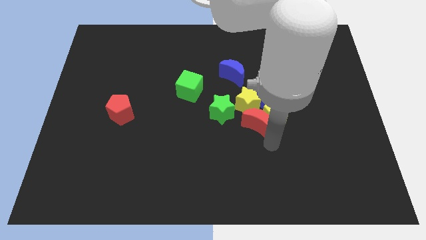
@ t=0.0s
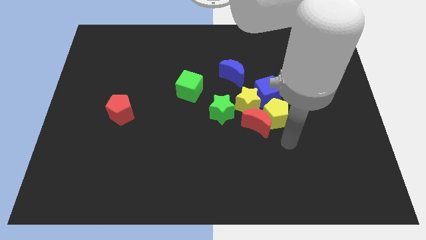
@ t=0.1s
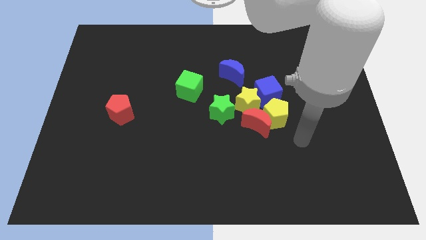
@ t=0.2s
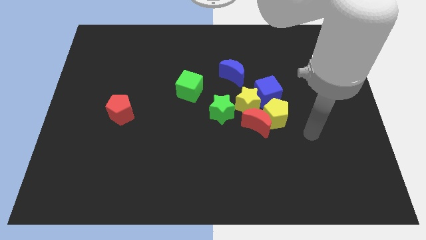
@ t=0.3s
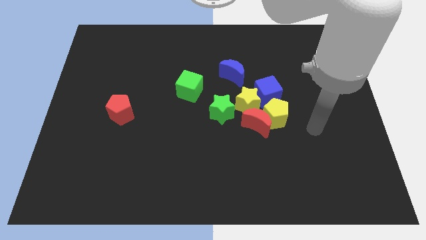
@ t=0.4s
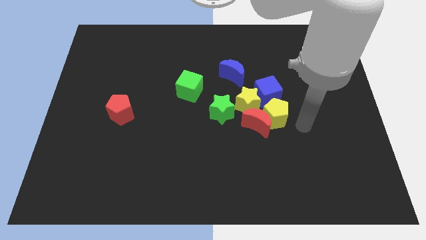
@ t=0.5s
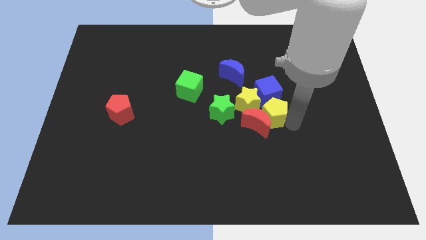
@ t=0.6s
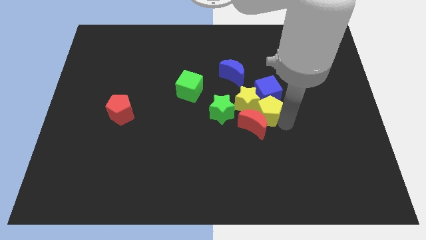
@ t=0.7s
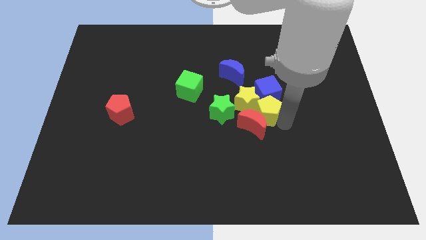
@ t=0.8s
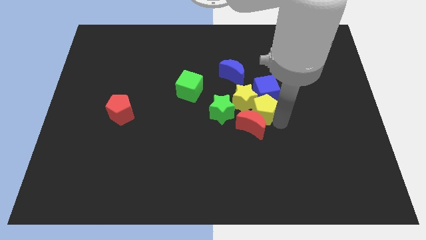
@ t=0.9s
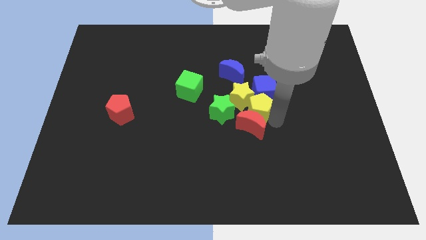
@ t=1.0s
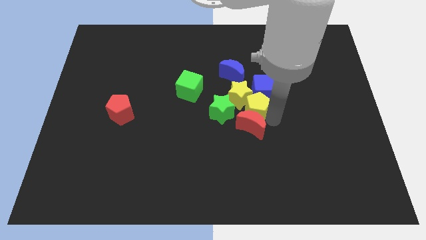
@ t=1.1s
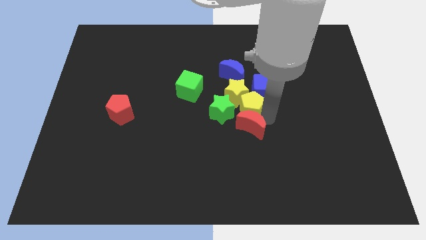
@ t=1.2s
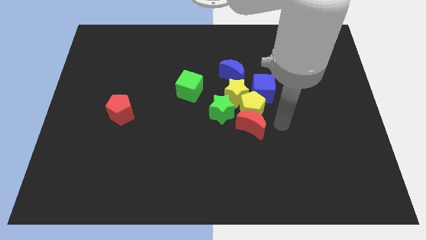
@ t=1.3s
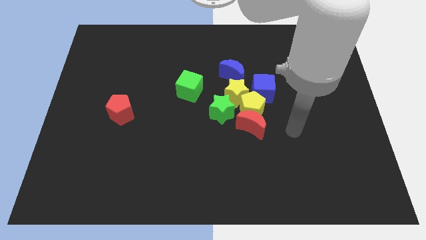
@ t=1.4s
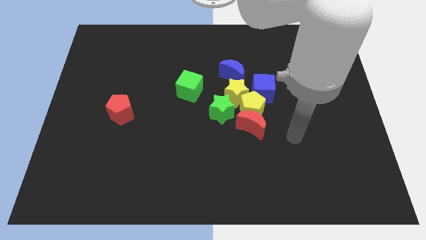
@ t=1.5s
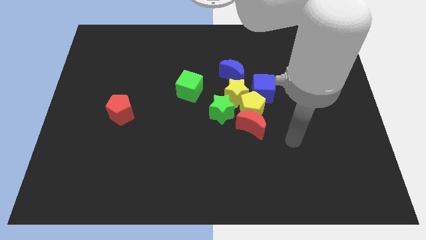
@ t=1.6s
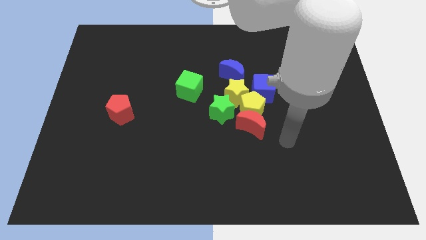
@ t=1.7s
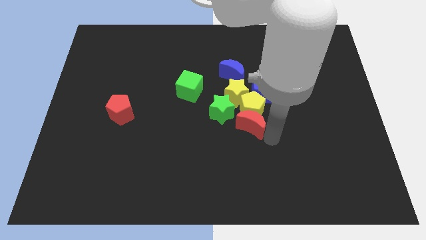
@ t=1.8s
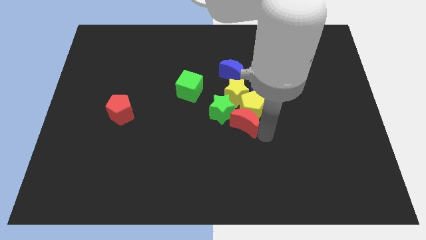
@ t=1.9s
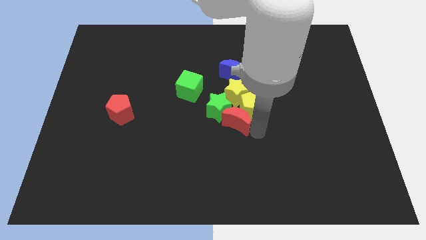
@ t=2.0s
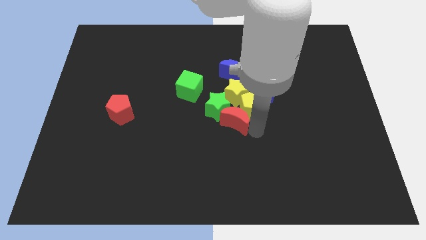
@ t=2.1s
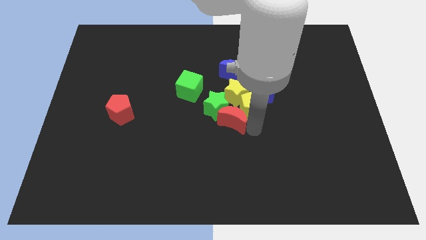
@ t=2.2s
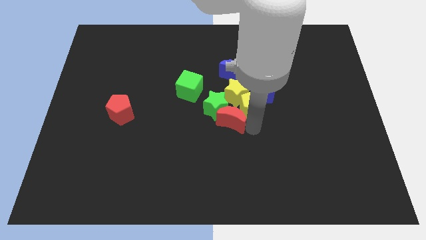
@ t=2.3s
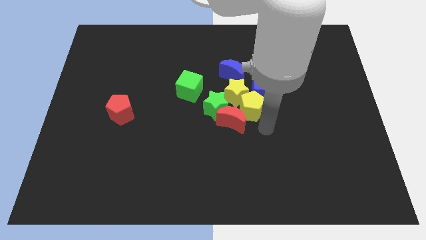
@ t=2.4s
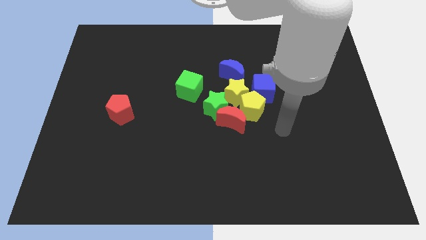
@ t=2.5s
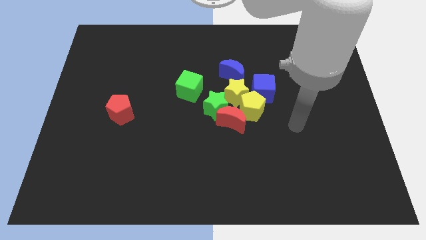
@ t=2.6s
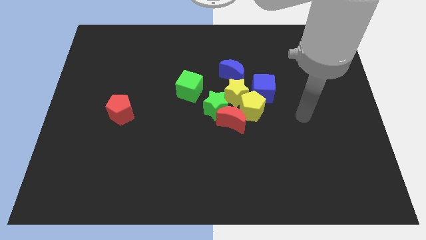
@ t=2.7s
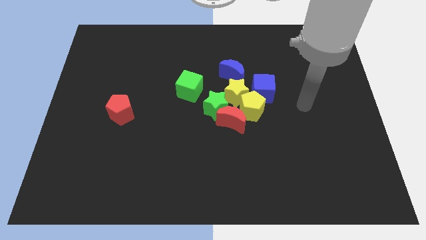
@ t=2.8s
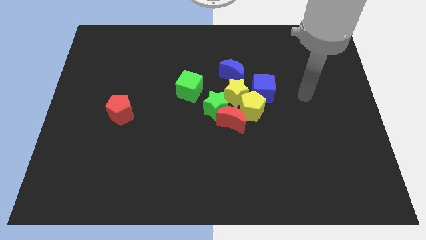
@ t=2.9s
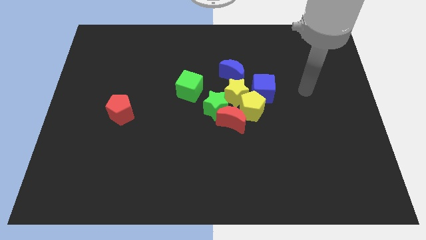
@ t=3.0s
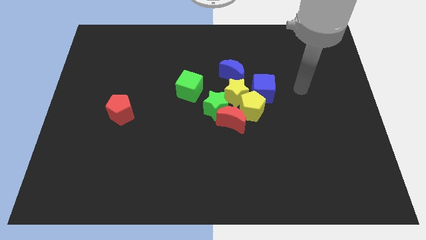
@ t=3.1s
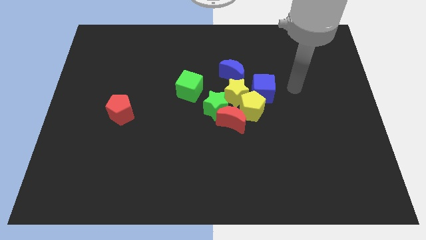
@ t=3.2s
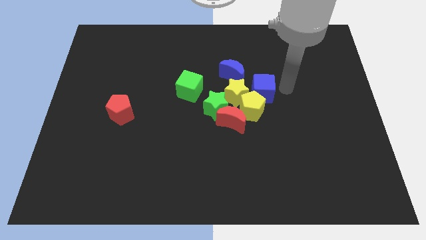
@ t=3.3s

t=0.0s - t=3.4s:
move a group of blocks slightly towards left

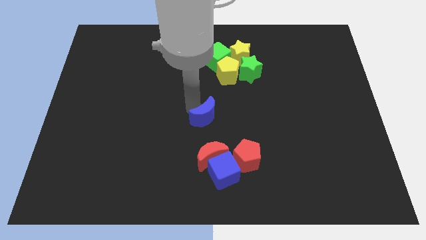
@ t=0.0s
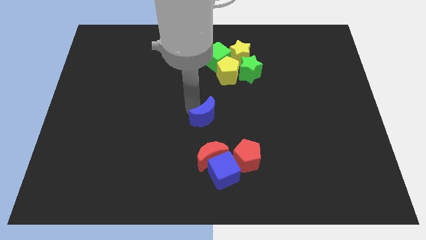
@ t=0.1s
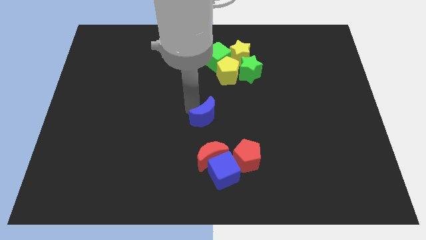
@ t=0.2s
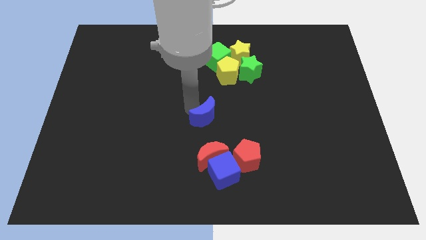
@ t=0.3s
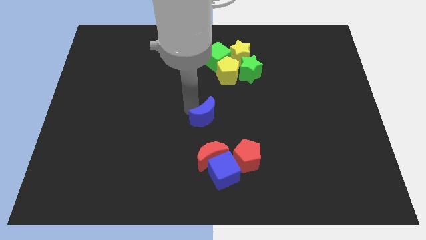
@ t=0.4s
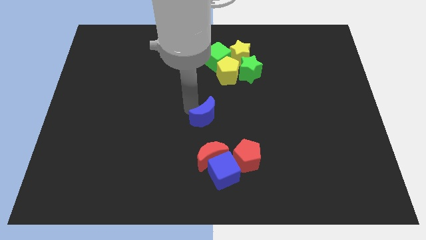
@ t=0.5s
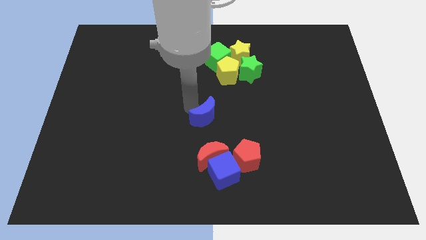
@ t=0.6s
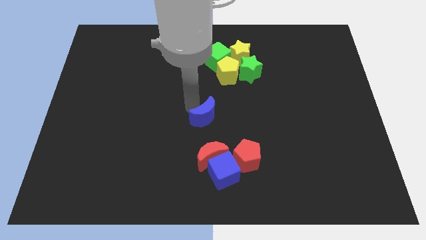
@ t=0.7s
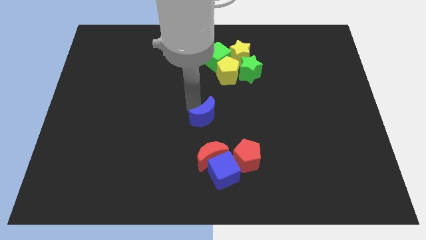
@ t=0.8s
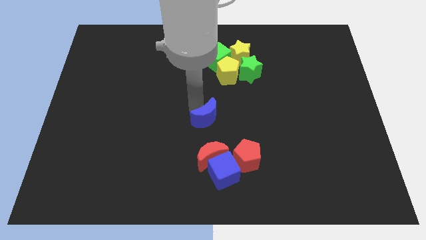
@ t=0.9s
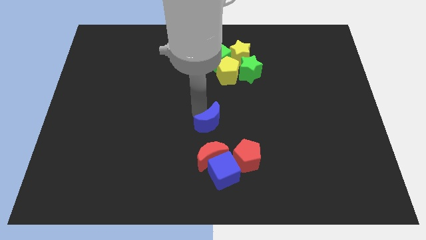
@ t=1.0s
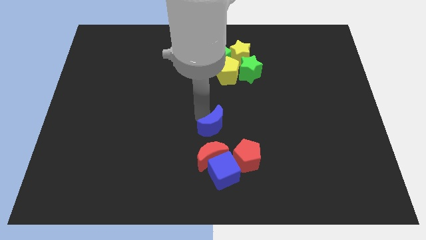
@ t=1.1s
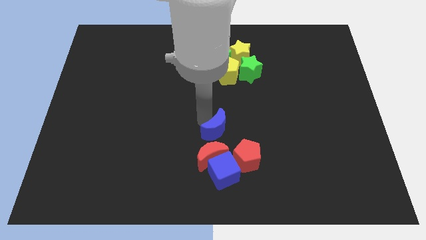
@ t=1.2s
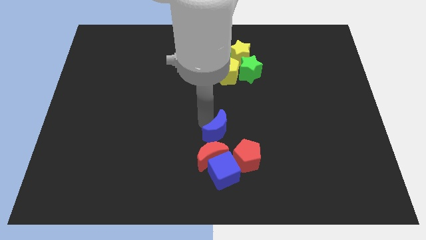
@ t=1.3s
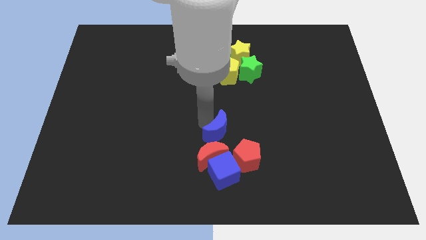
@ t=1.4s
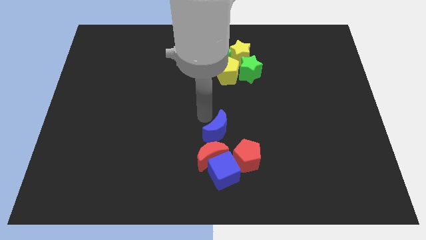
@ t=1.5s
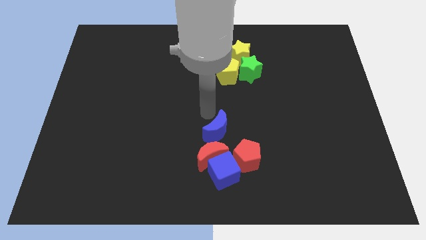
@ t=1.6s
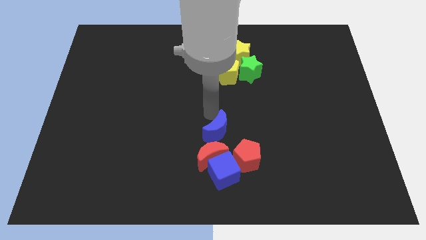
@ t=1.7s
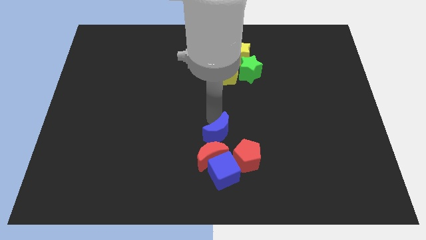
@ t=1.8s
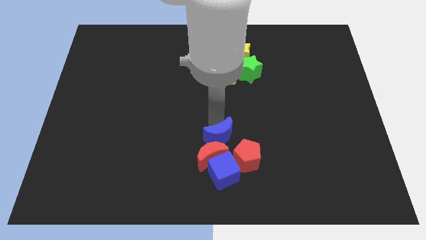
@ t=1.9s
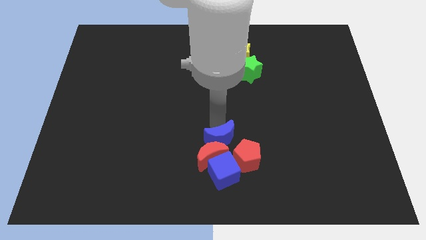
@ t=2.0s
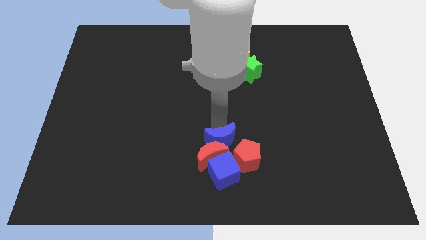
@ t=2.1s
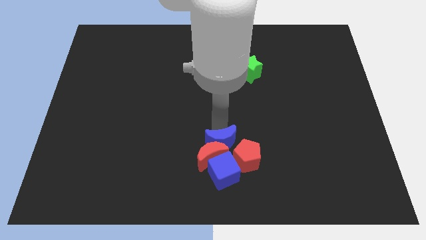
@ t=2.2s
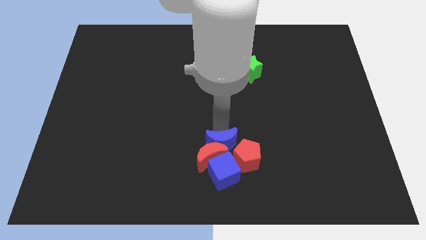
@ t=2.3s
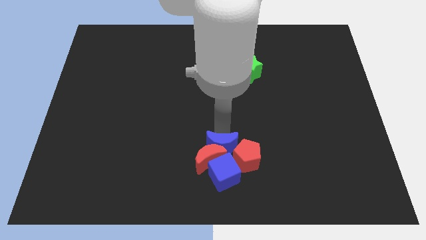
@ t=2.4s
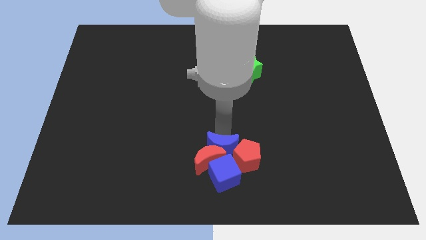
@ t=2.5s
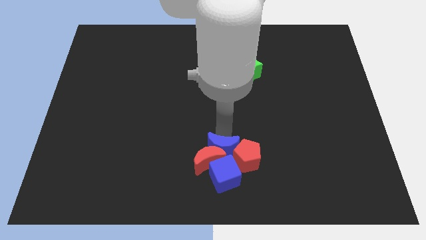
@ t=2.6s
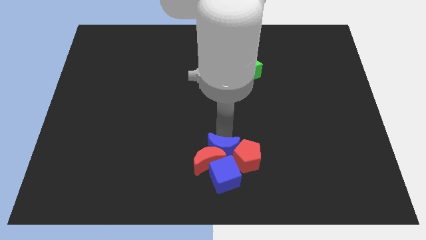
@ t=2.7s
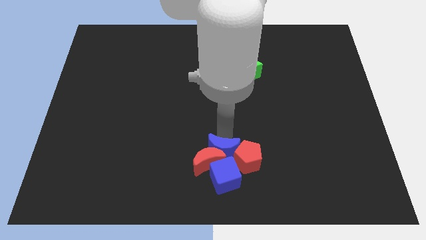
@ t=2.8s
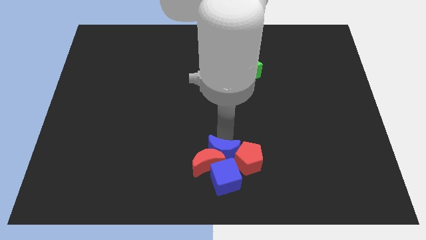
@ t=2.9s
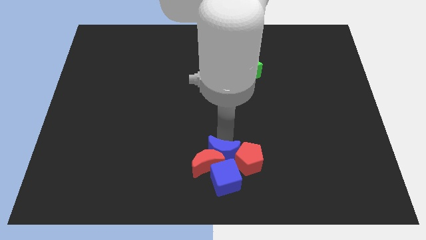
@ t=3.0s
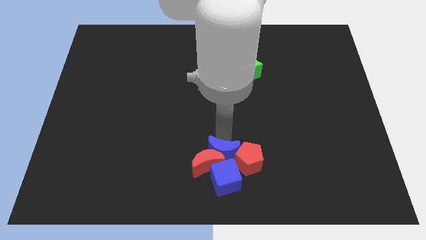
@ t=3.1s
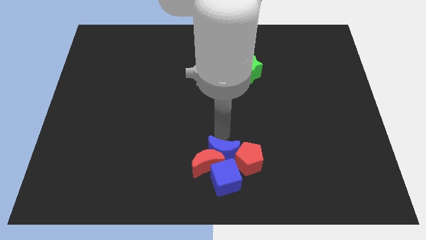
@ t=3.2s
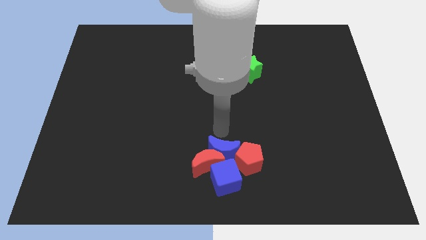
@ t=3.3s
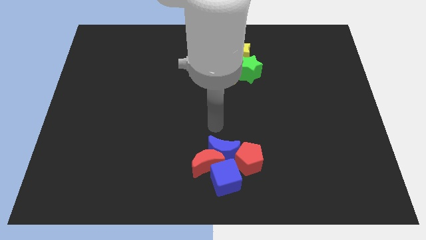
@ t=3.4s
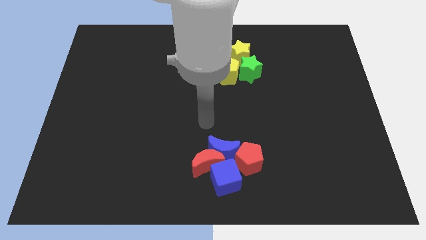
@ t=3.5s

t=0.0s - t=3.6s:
push the blue crescent to the top of the red crescent

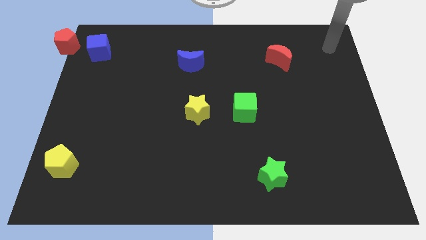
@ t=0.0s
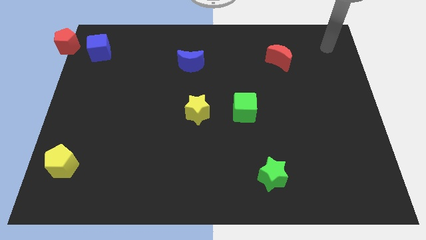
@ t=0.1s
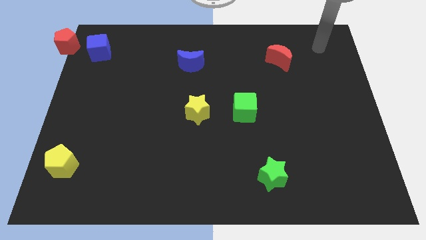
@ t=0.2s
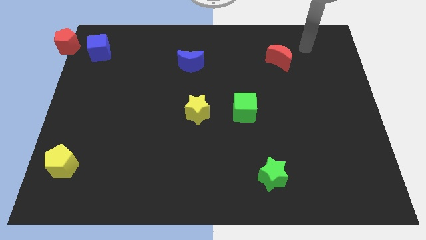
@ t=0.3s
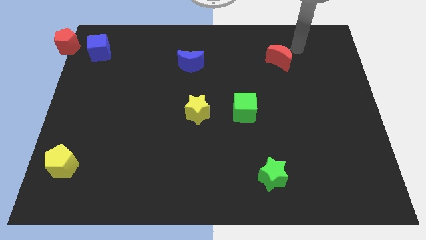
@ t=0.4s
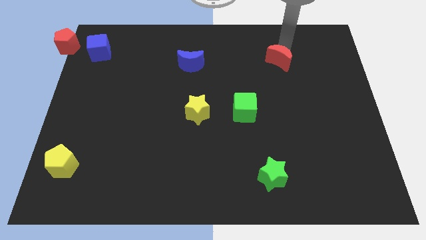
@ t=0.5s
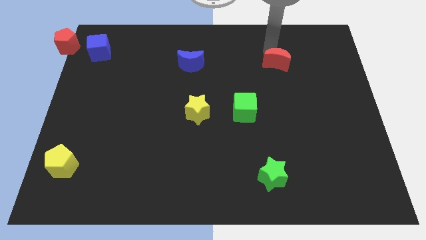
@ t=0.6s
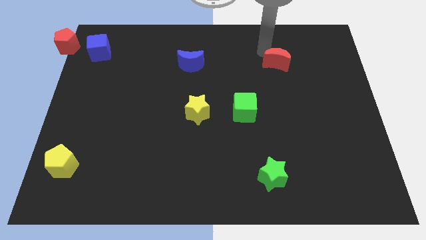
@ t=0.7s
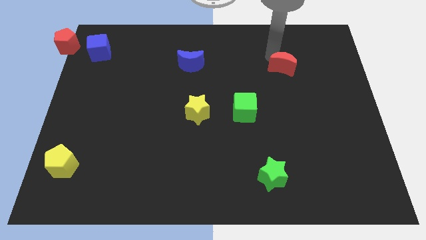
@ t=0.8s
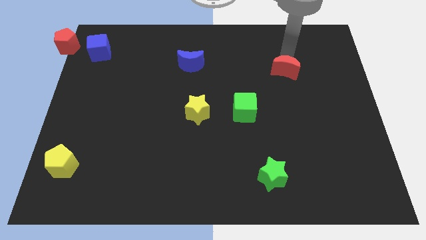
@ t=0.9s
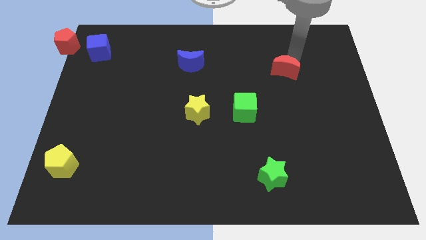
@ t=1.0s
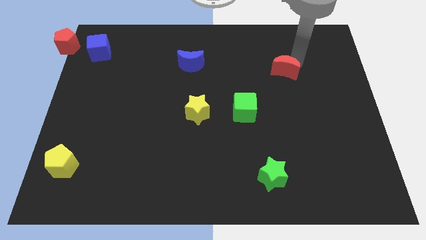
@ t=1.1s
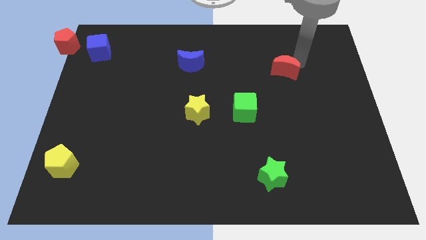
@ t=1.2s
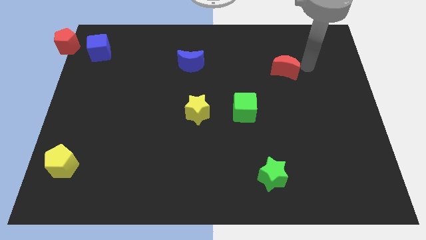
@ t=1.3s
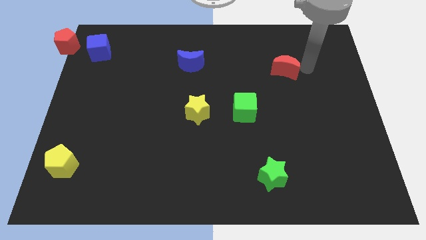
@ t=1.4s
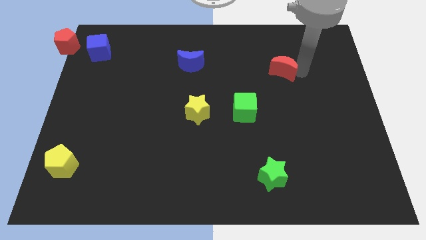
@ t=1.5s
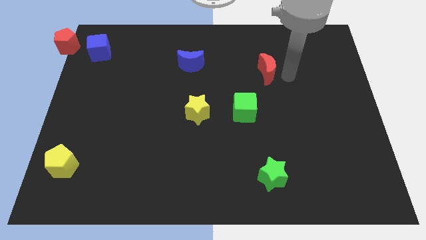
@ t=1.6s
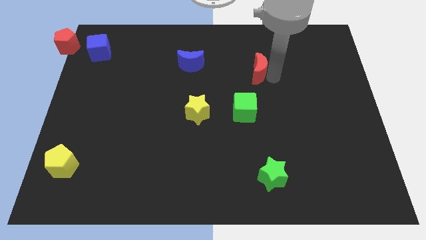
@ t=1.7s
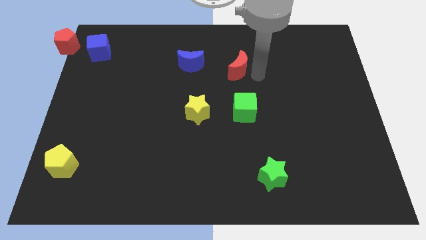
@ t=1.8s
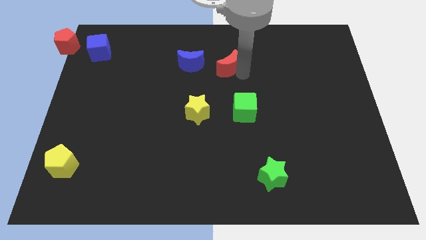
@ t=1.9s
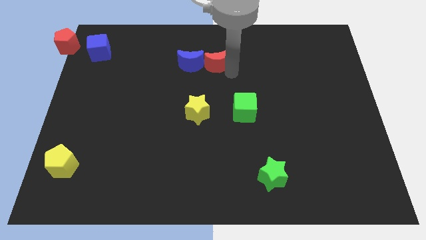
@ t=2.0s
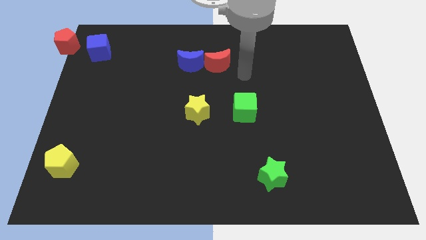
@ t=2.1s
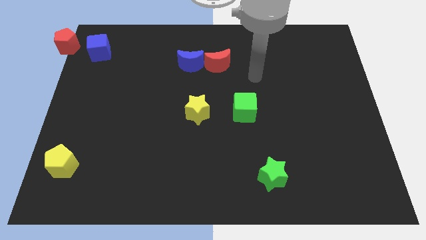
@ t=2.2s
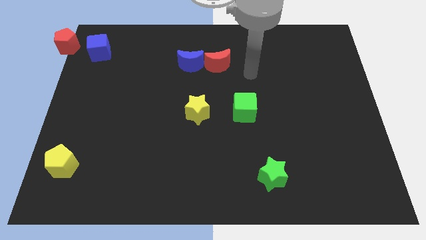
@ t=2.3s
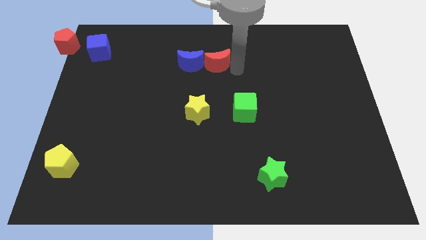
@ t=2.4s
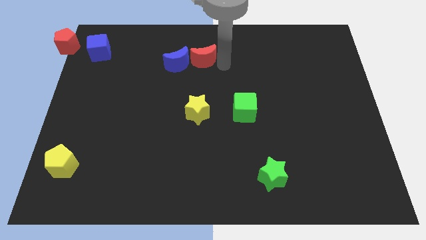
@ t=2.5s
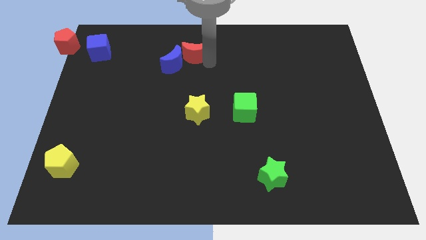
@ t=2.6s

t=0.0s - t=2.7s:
place the red moon to the right of blue crescent
